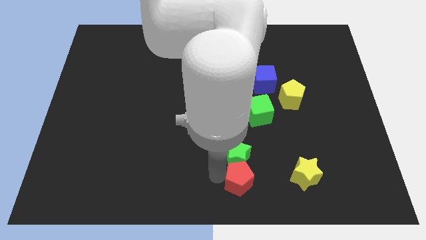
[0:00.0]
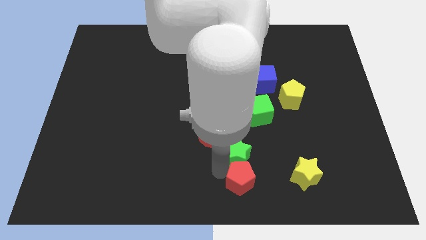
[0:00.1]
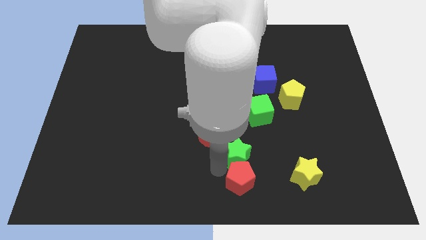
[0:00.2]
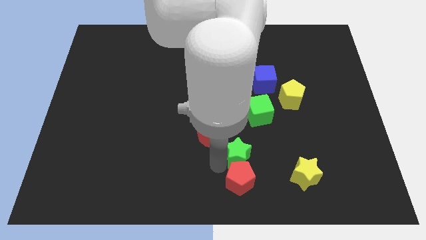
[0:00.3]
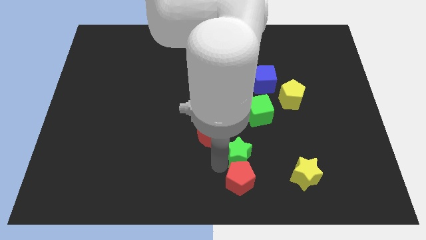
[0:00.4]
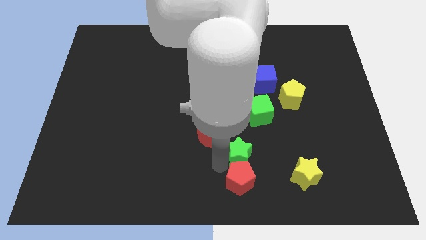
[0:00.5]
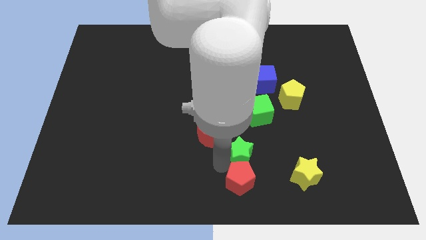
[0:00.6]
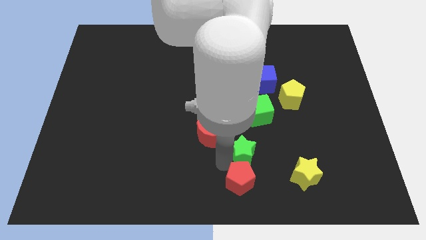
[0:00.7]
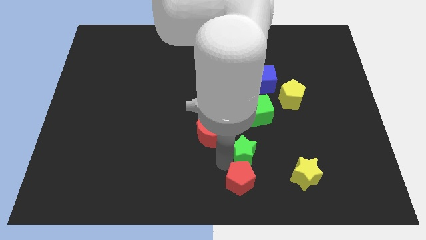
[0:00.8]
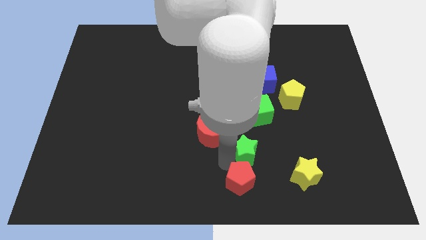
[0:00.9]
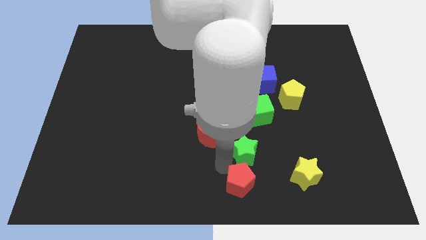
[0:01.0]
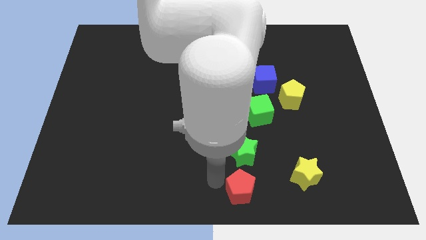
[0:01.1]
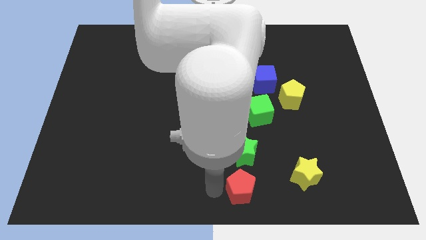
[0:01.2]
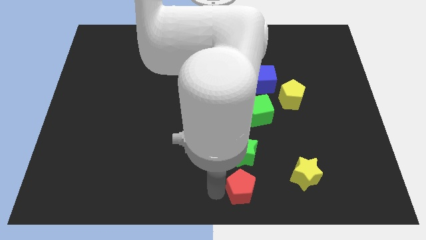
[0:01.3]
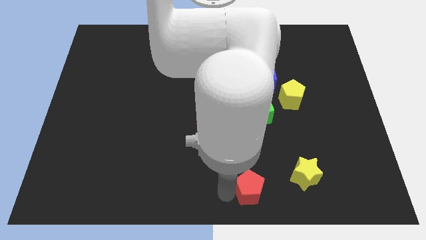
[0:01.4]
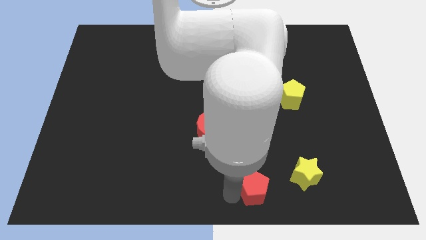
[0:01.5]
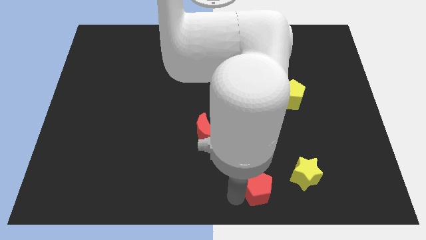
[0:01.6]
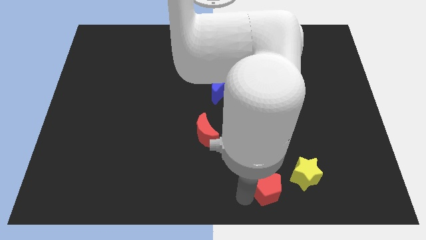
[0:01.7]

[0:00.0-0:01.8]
separate green star and the red pentagon

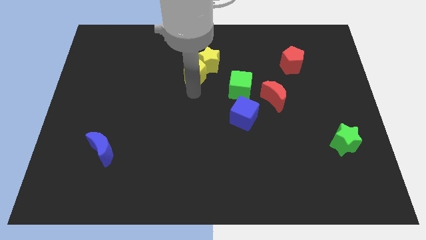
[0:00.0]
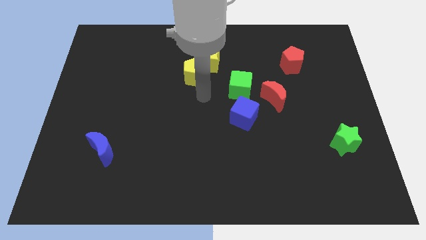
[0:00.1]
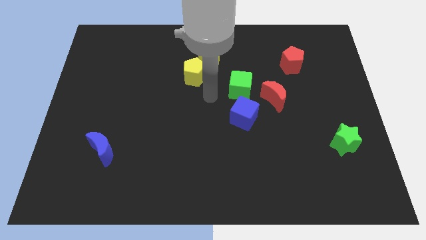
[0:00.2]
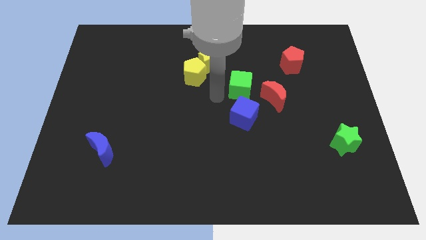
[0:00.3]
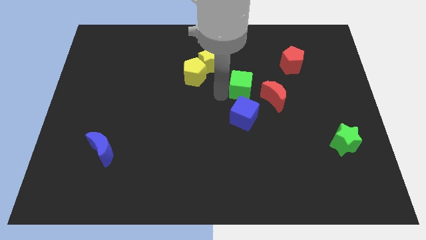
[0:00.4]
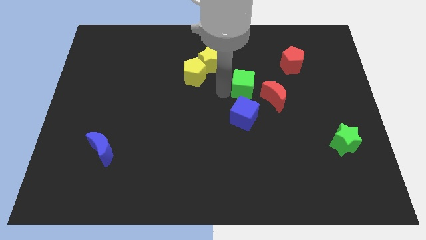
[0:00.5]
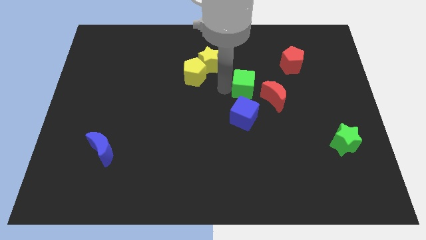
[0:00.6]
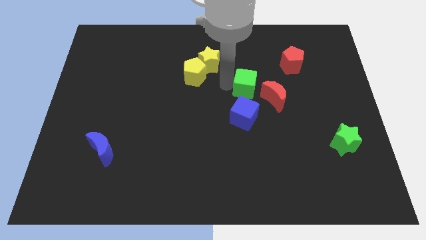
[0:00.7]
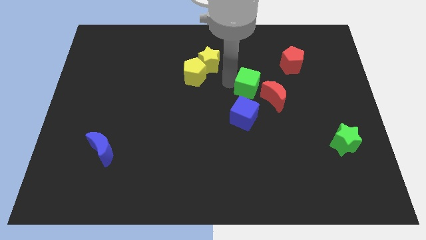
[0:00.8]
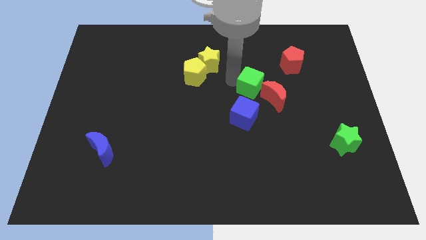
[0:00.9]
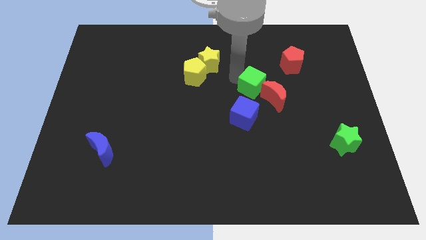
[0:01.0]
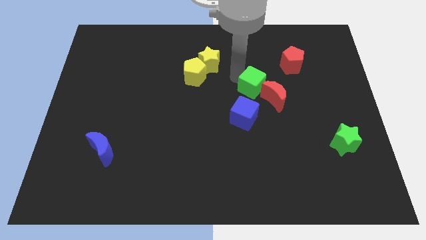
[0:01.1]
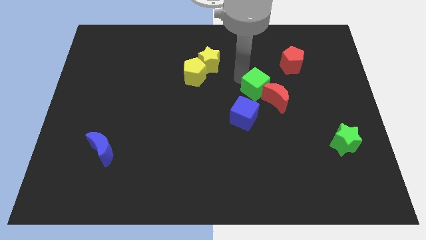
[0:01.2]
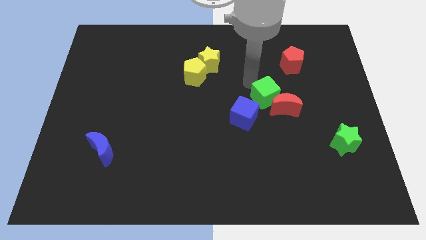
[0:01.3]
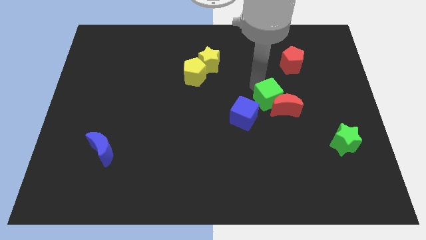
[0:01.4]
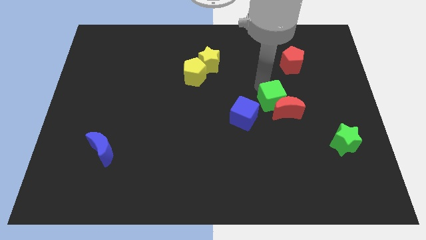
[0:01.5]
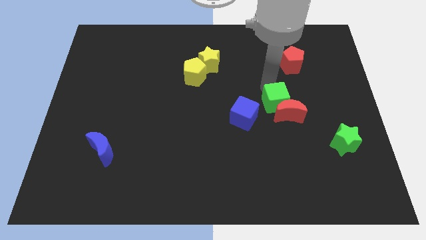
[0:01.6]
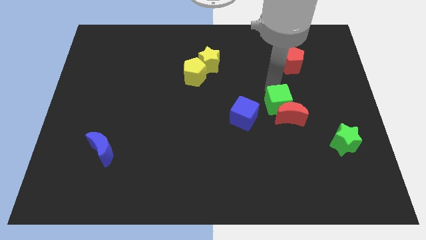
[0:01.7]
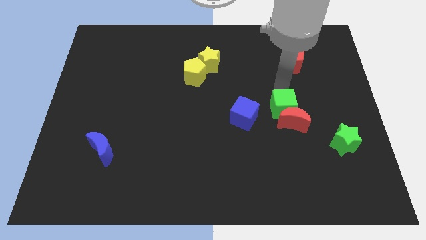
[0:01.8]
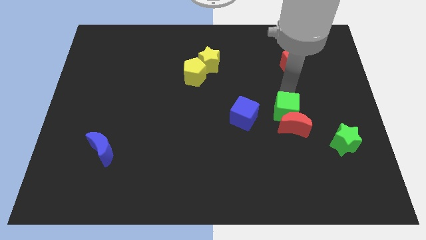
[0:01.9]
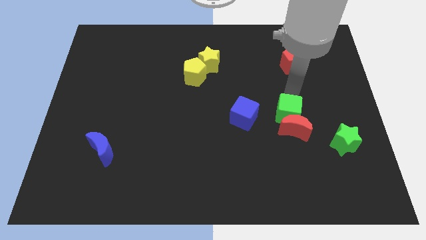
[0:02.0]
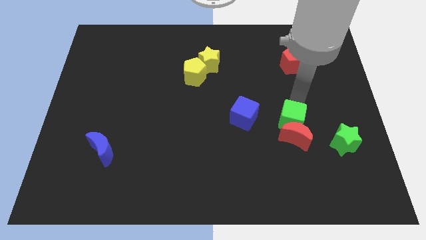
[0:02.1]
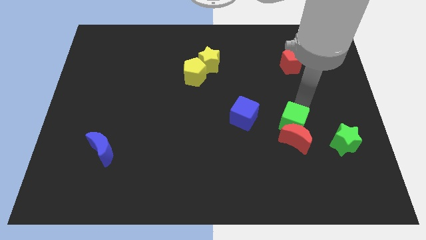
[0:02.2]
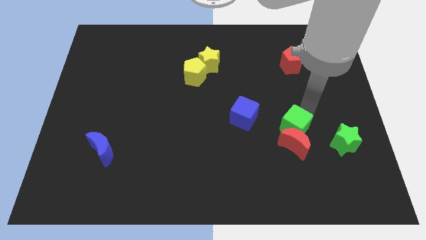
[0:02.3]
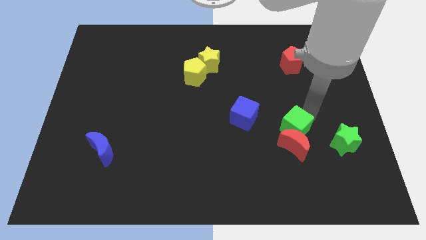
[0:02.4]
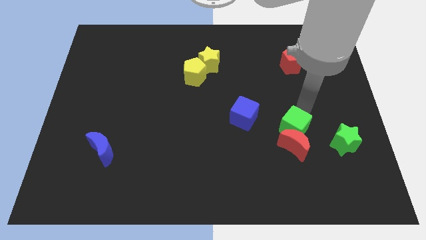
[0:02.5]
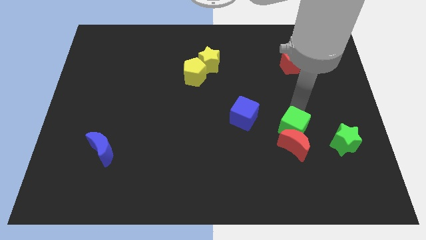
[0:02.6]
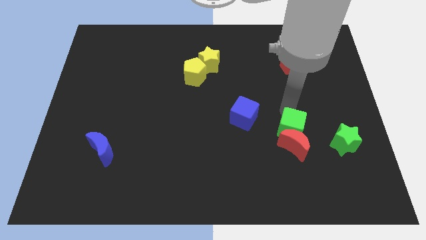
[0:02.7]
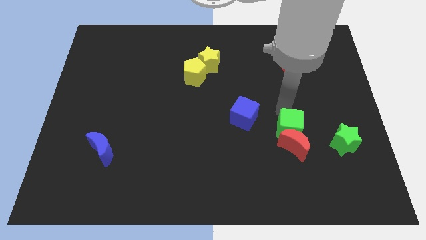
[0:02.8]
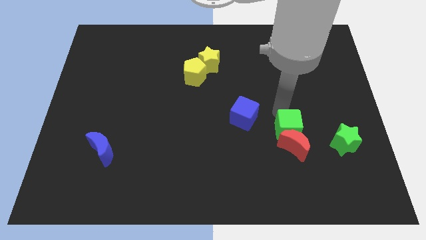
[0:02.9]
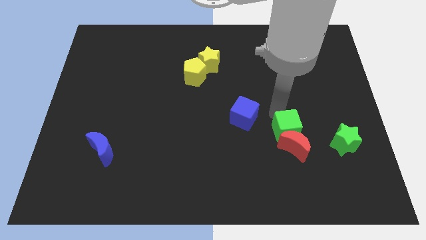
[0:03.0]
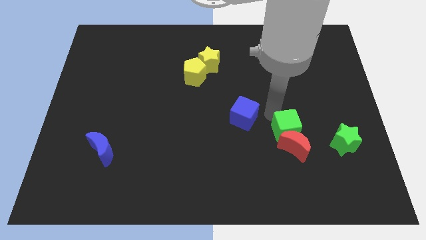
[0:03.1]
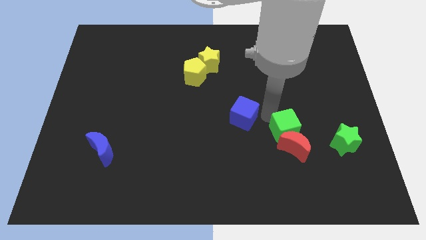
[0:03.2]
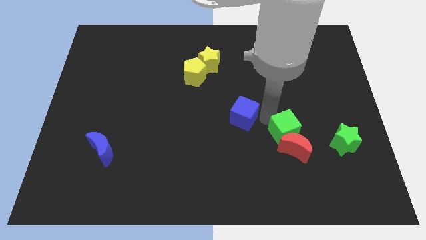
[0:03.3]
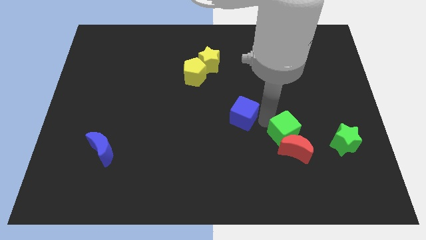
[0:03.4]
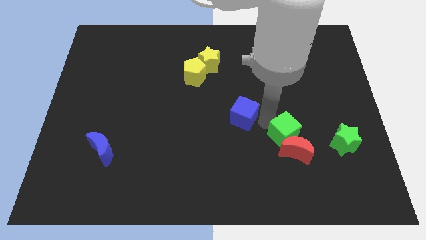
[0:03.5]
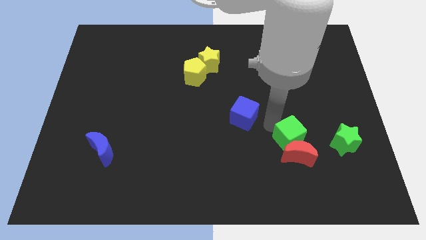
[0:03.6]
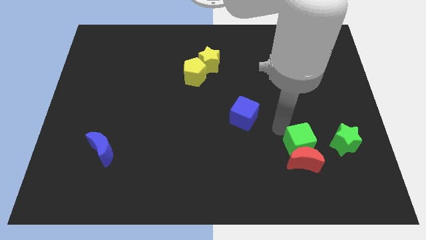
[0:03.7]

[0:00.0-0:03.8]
push the green cube into the red crescent

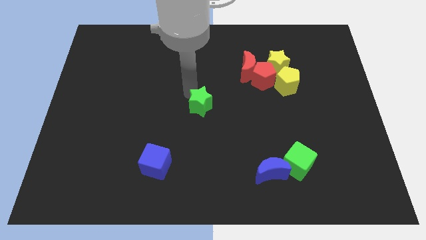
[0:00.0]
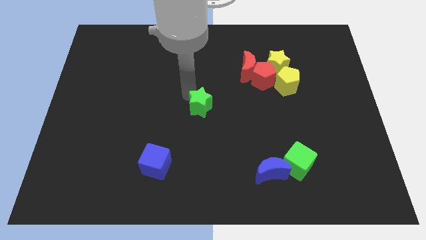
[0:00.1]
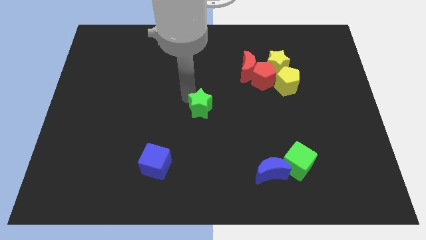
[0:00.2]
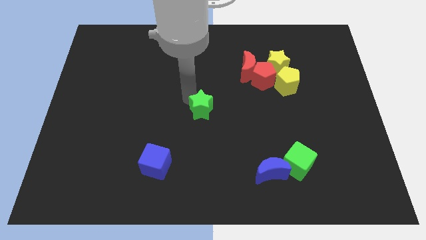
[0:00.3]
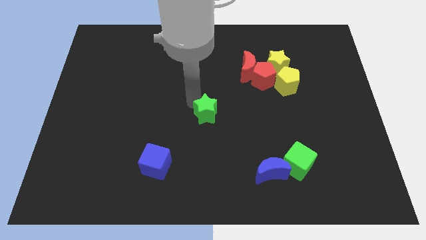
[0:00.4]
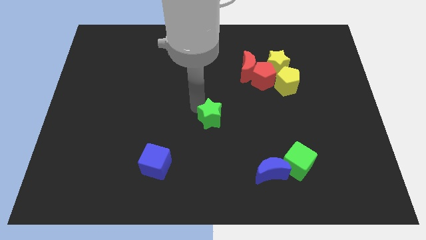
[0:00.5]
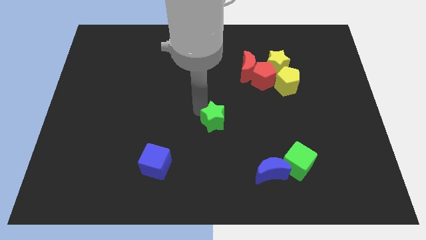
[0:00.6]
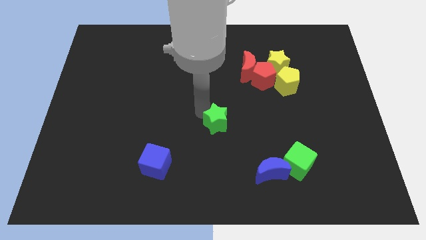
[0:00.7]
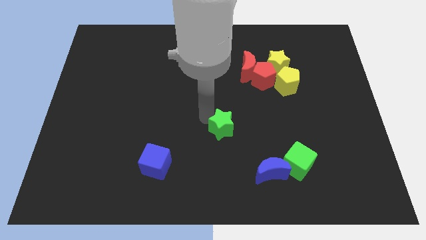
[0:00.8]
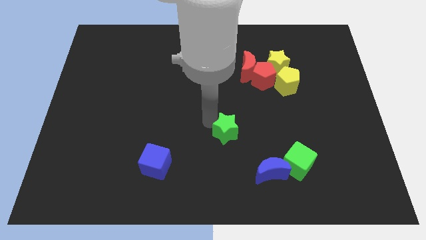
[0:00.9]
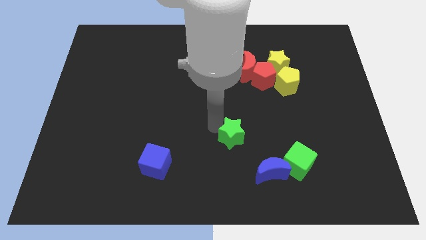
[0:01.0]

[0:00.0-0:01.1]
move the green star to the center of the board

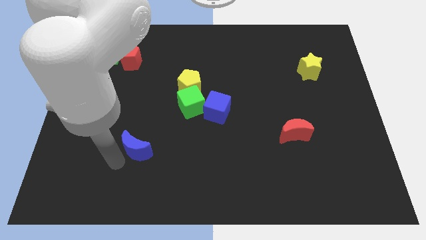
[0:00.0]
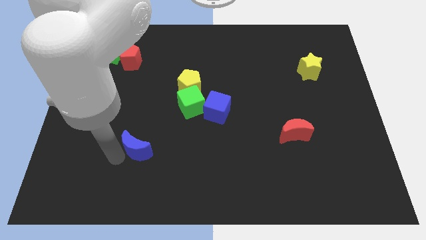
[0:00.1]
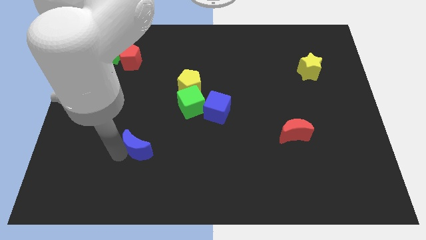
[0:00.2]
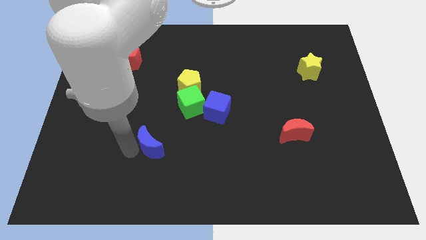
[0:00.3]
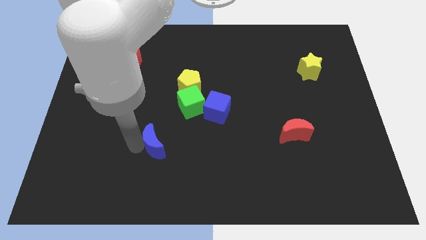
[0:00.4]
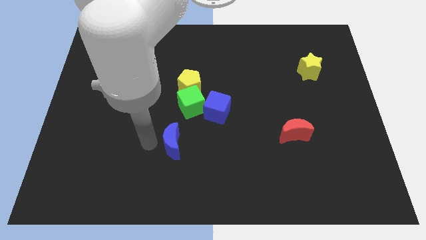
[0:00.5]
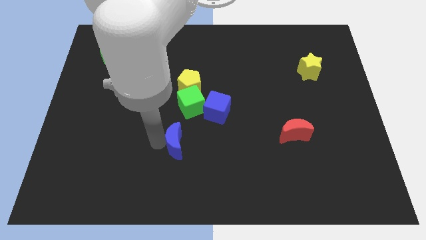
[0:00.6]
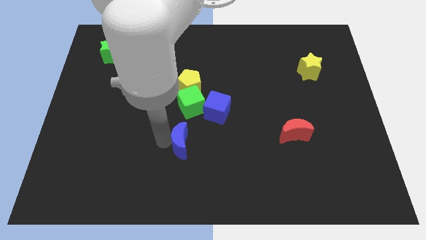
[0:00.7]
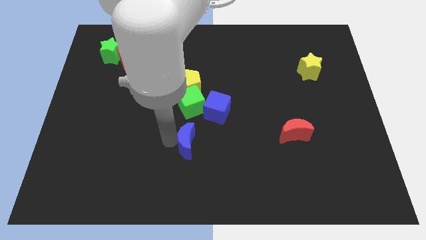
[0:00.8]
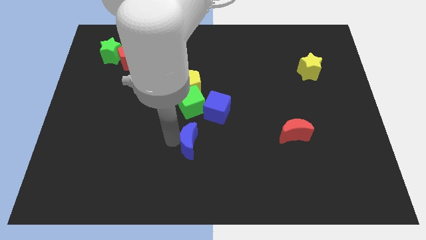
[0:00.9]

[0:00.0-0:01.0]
place blue moon to the bottom of green cube

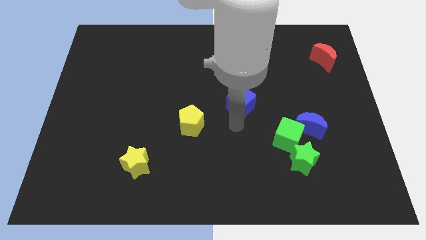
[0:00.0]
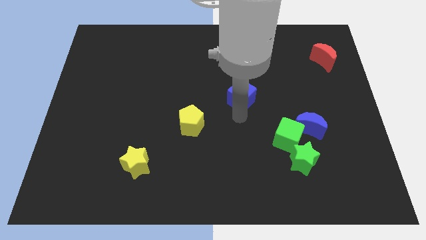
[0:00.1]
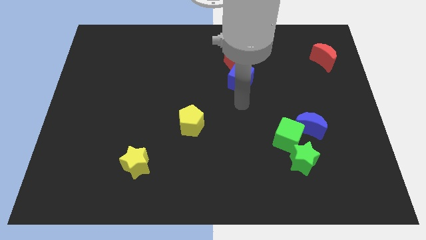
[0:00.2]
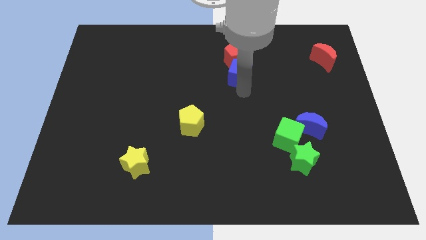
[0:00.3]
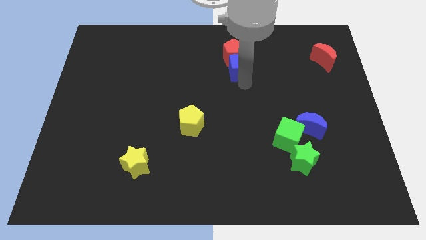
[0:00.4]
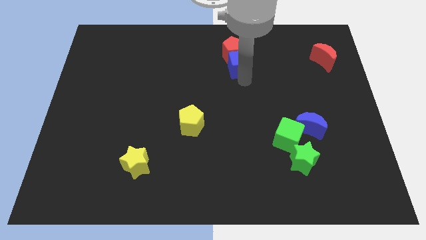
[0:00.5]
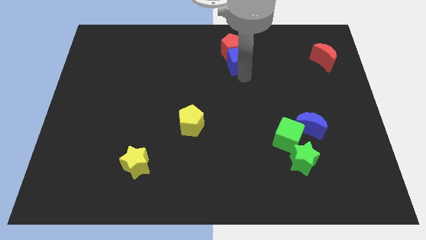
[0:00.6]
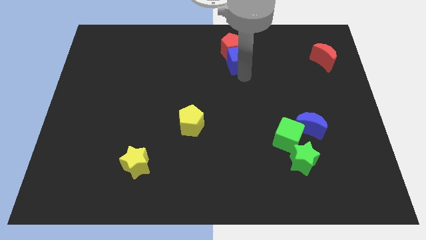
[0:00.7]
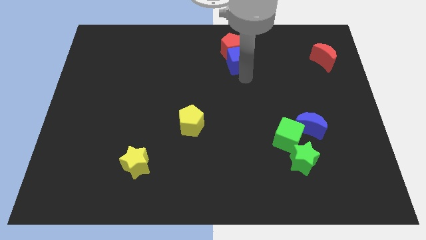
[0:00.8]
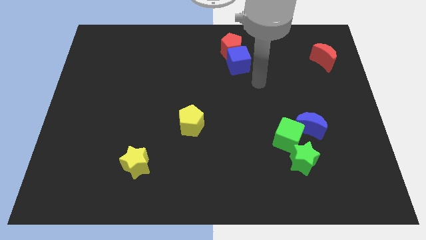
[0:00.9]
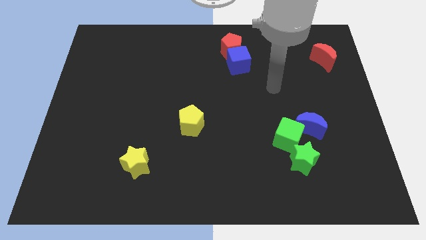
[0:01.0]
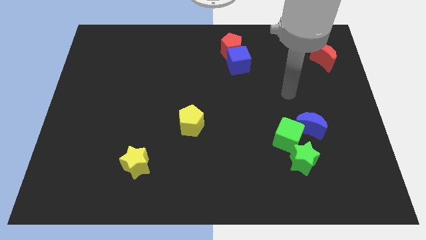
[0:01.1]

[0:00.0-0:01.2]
push the blue cube into the red pentagon
